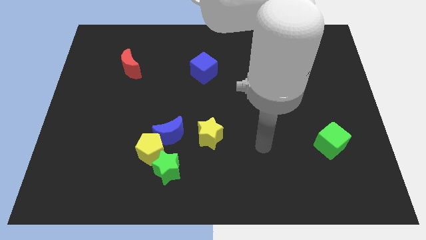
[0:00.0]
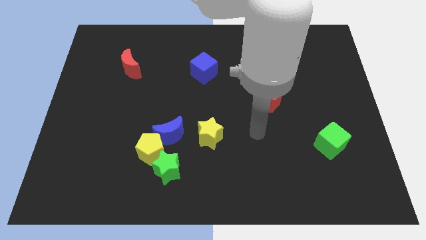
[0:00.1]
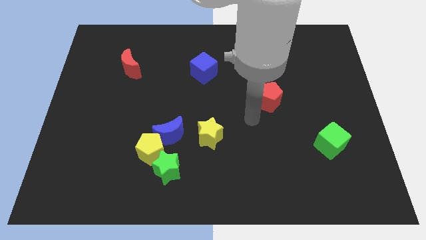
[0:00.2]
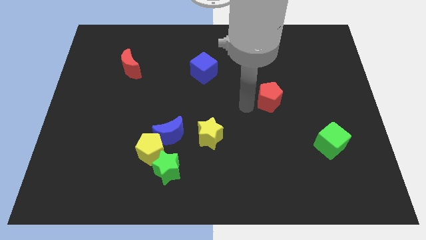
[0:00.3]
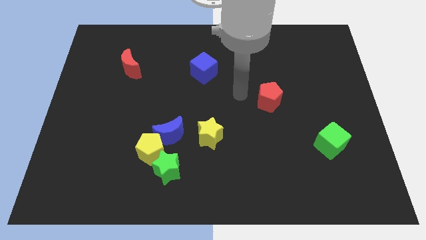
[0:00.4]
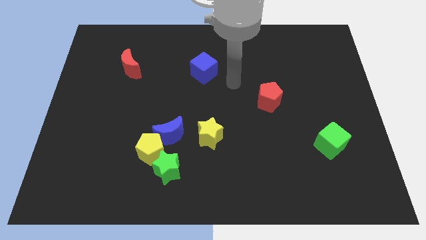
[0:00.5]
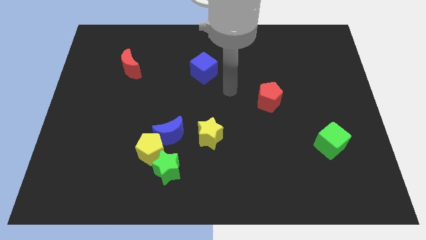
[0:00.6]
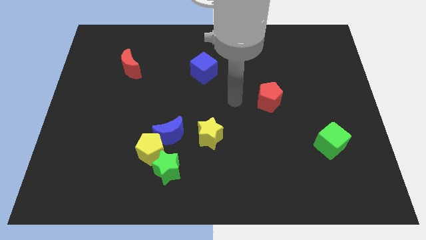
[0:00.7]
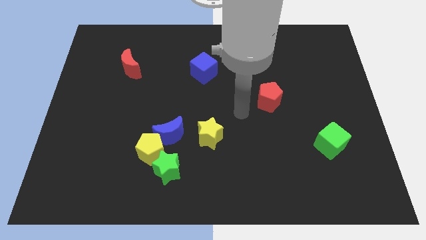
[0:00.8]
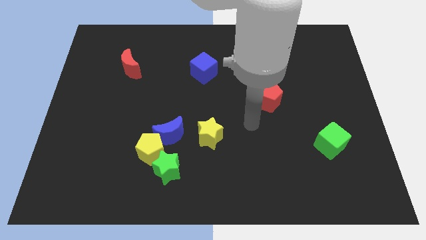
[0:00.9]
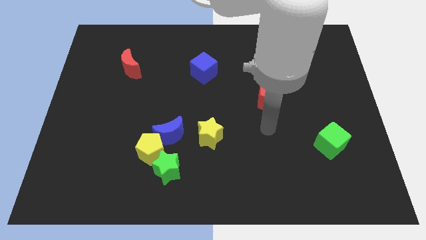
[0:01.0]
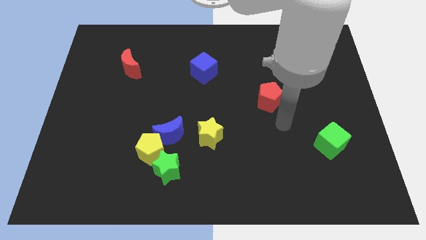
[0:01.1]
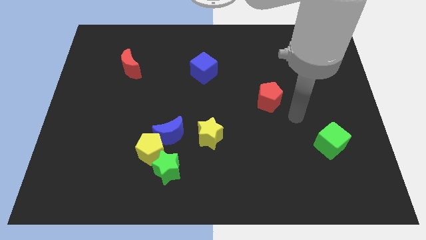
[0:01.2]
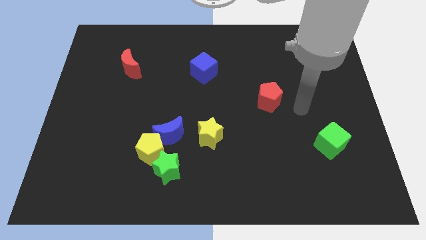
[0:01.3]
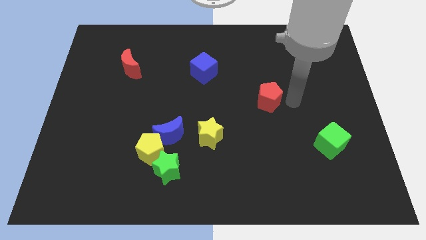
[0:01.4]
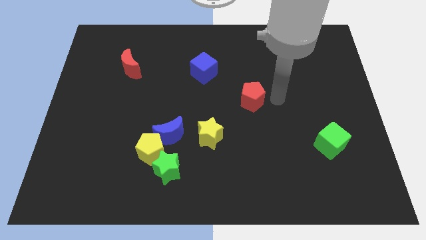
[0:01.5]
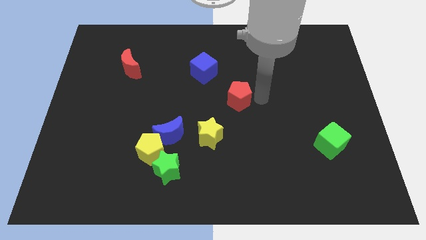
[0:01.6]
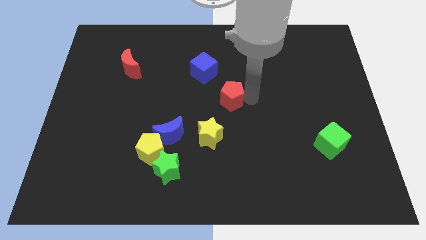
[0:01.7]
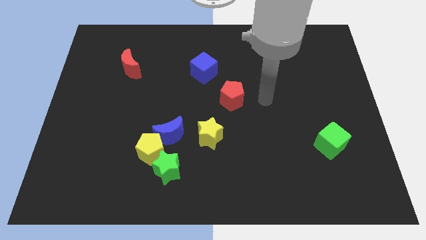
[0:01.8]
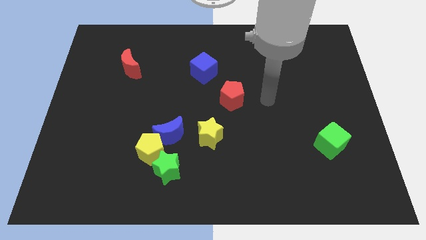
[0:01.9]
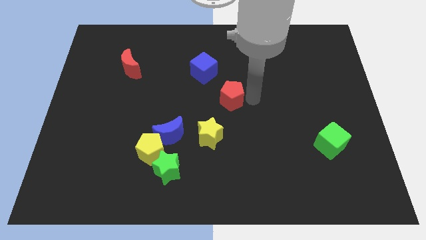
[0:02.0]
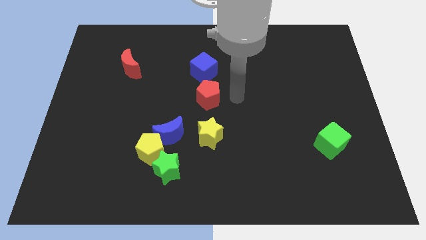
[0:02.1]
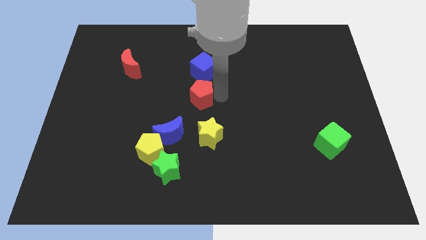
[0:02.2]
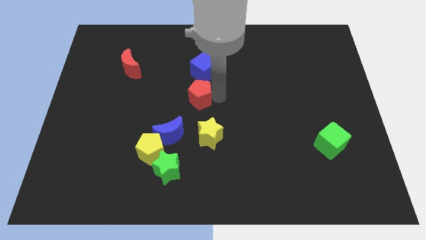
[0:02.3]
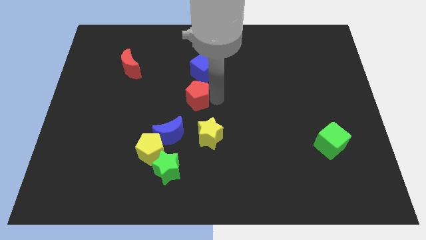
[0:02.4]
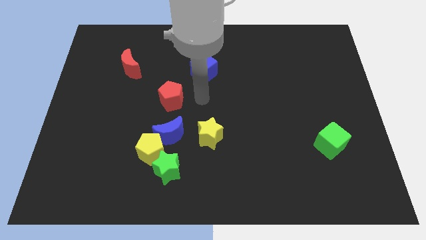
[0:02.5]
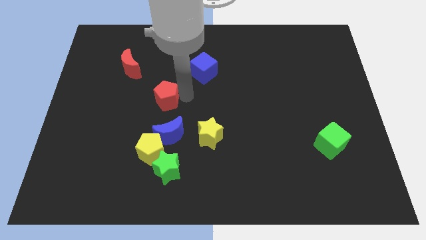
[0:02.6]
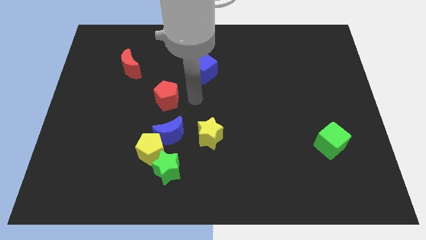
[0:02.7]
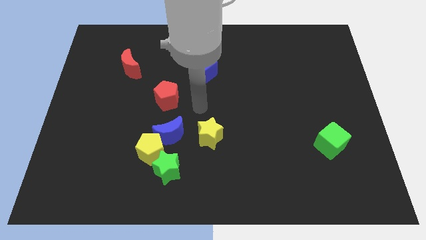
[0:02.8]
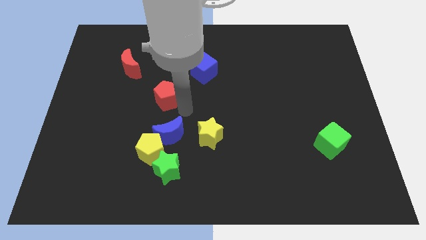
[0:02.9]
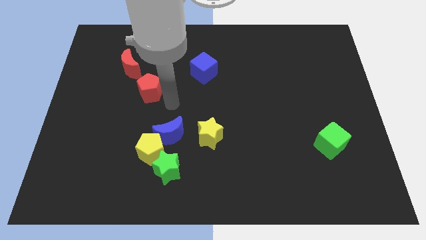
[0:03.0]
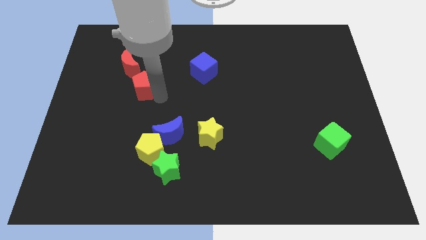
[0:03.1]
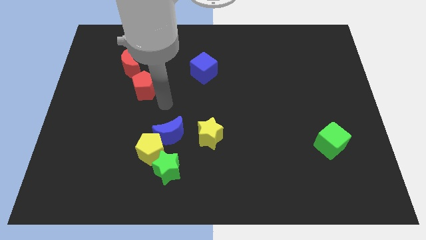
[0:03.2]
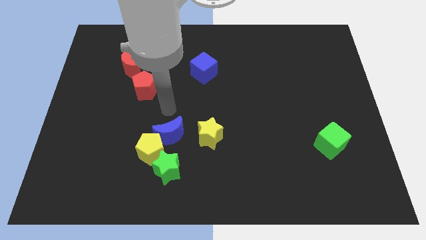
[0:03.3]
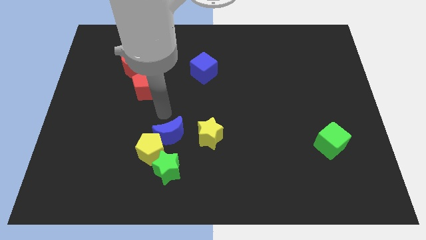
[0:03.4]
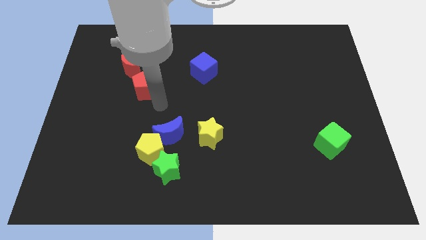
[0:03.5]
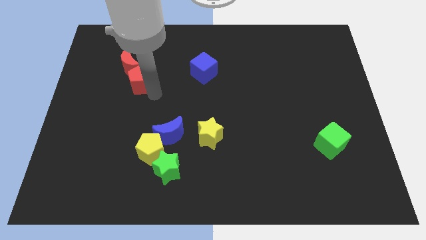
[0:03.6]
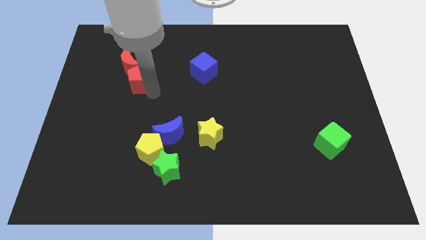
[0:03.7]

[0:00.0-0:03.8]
push the red pentagon into the red crescent

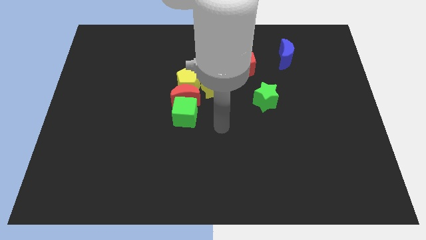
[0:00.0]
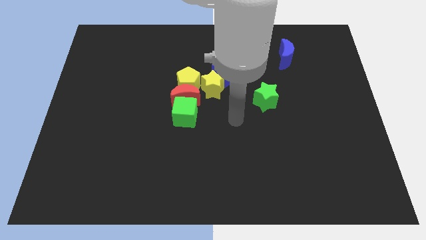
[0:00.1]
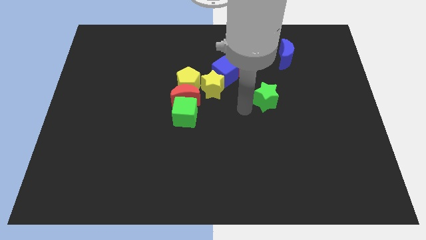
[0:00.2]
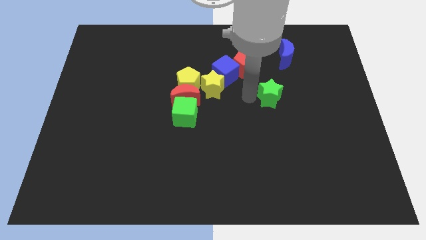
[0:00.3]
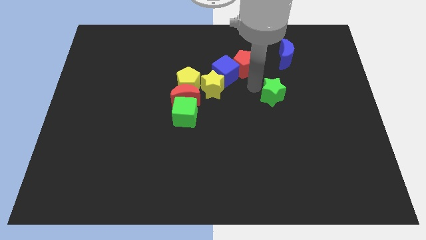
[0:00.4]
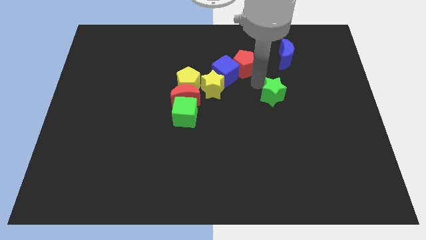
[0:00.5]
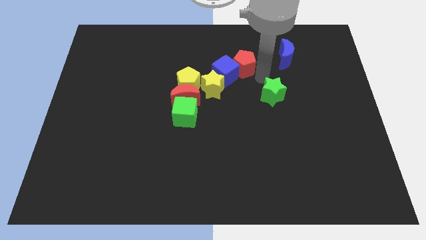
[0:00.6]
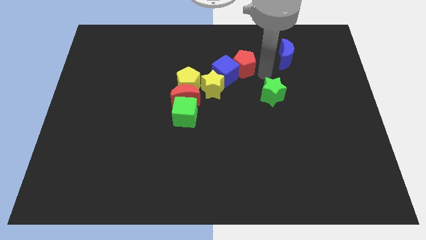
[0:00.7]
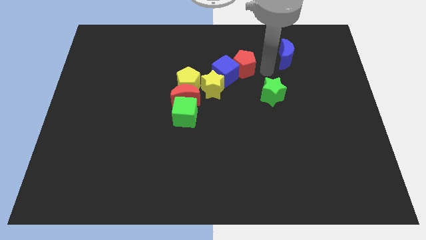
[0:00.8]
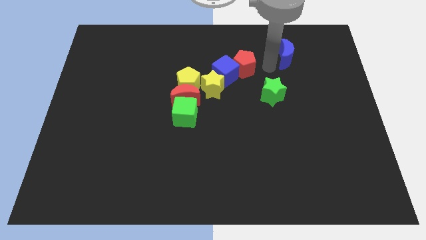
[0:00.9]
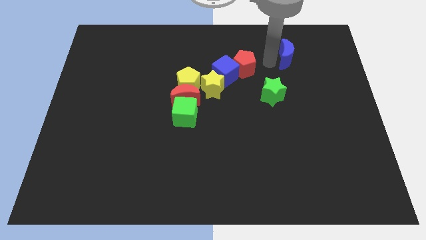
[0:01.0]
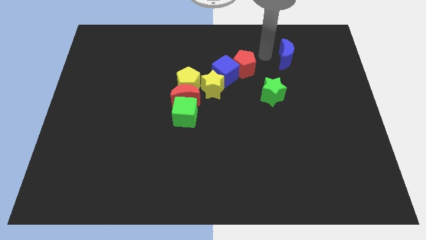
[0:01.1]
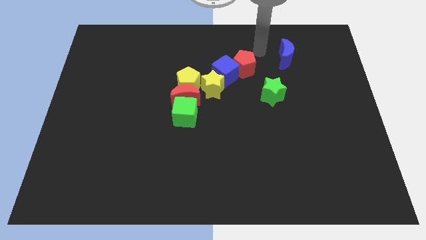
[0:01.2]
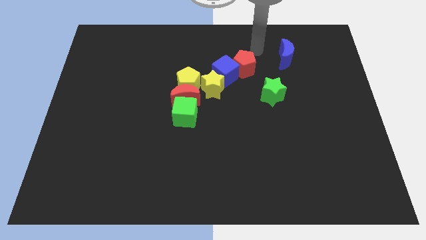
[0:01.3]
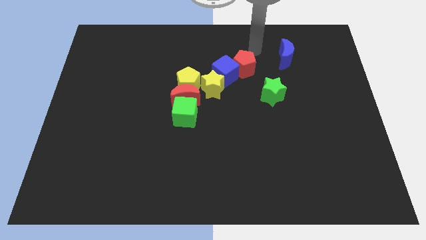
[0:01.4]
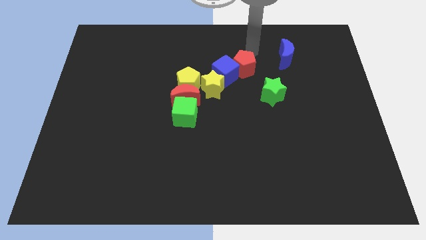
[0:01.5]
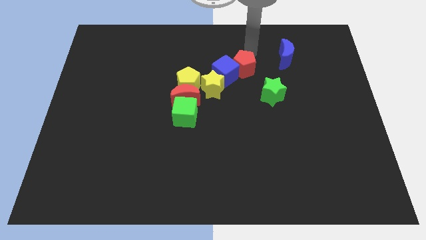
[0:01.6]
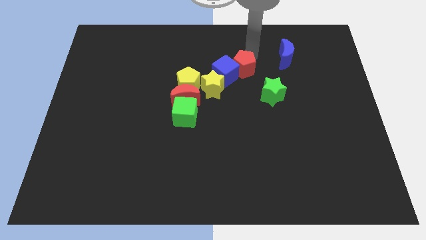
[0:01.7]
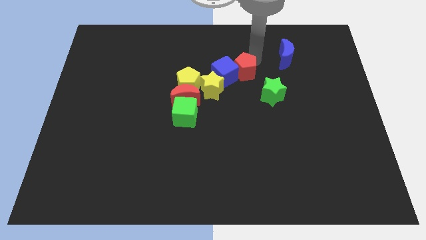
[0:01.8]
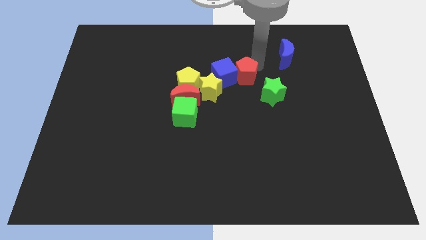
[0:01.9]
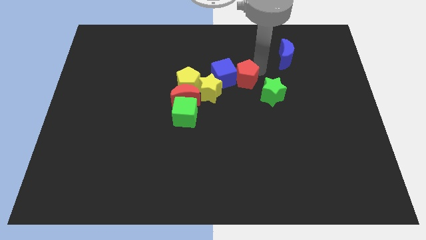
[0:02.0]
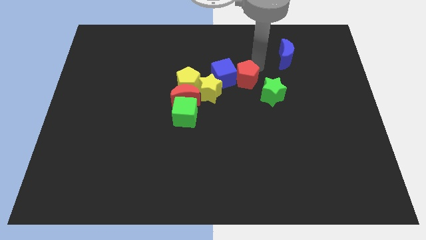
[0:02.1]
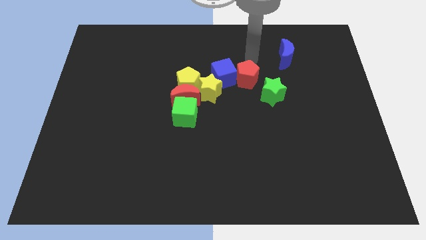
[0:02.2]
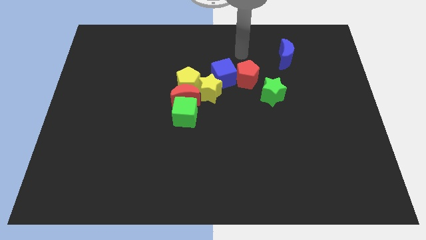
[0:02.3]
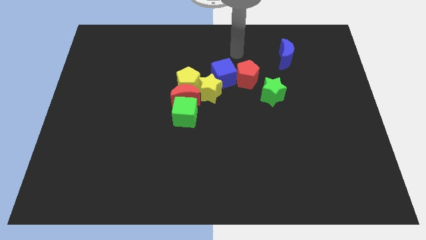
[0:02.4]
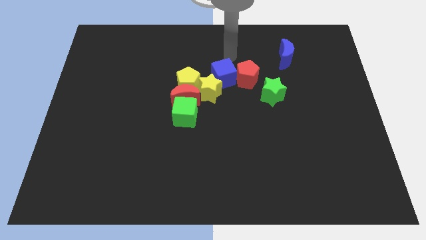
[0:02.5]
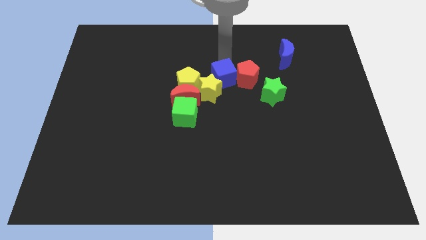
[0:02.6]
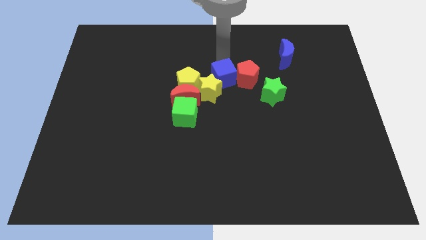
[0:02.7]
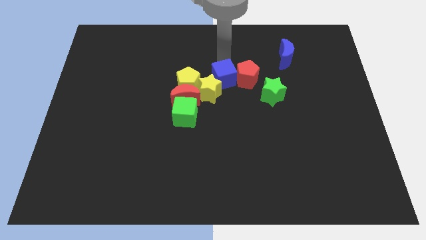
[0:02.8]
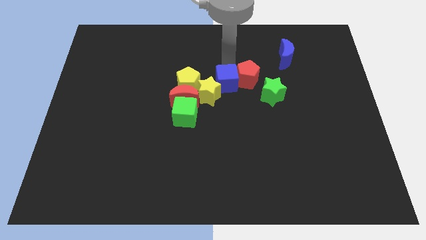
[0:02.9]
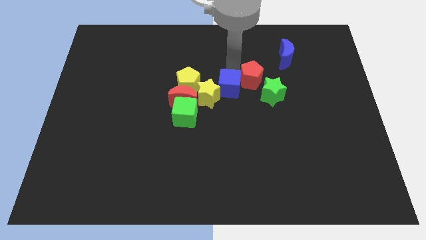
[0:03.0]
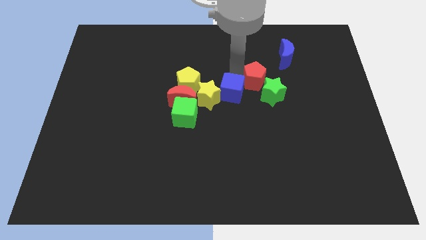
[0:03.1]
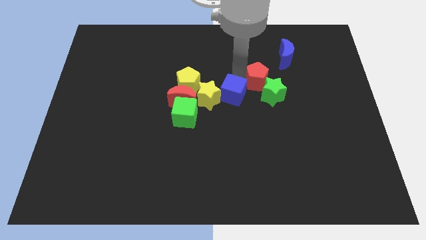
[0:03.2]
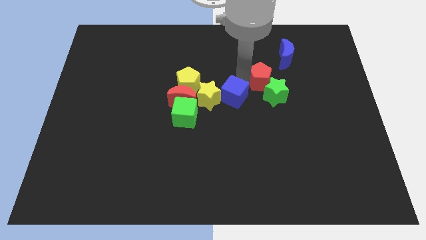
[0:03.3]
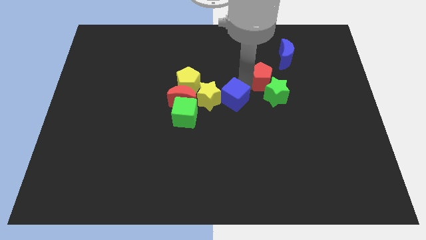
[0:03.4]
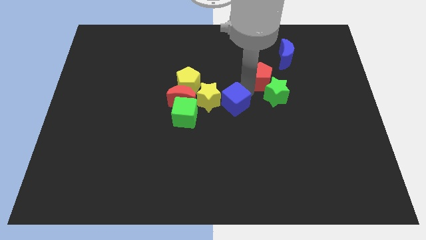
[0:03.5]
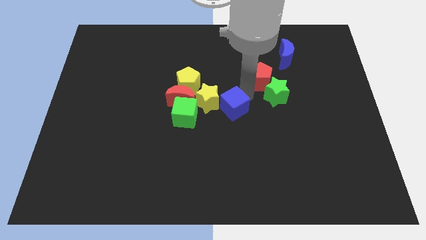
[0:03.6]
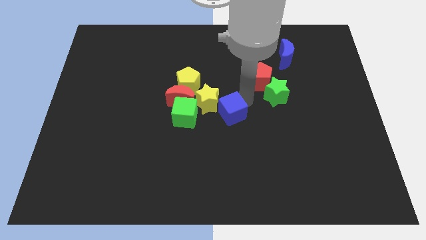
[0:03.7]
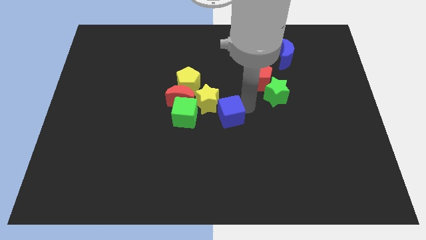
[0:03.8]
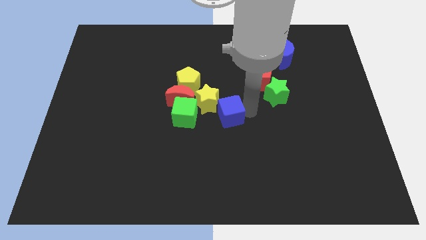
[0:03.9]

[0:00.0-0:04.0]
slightly push the red pentagon into the blue cube

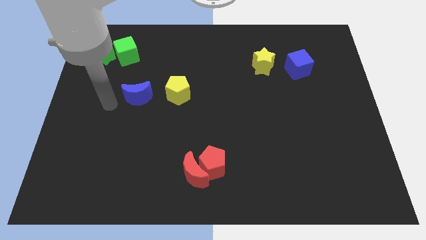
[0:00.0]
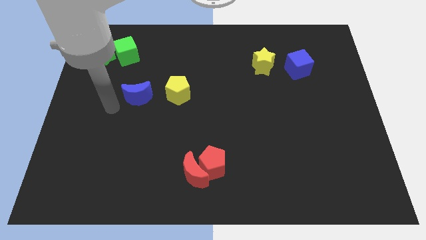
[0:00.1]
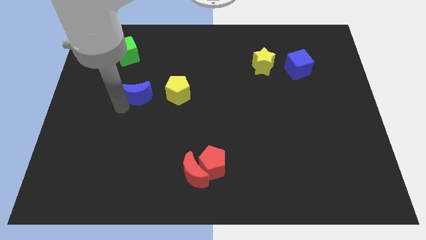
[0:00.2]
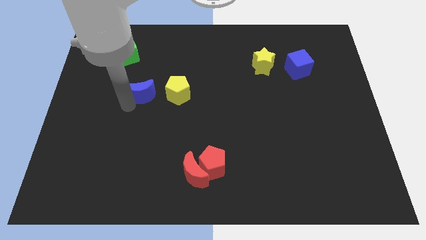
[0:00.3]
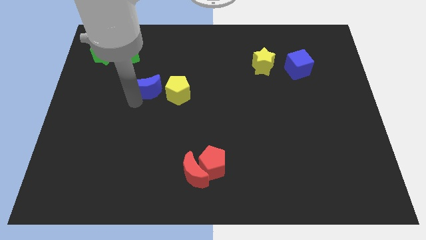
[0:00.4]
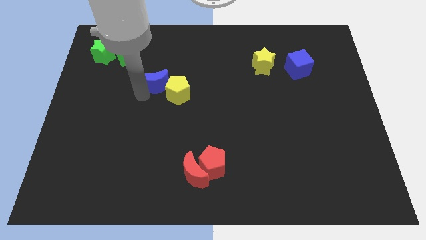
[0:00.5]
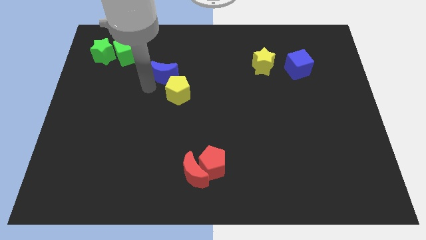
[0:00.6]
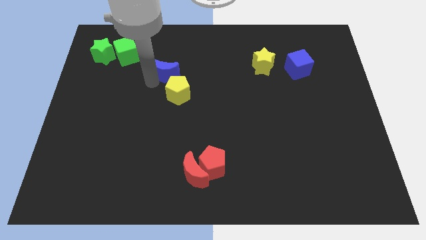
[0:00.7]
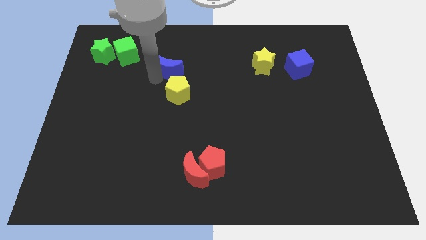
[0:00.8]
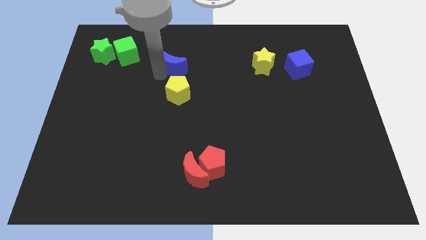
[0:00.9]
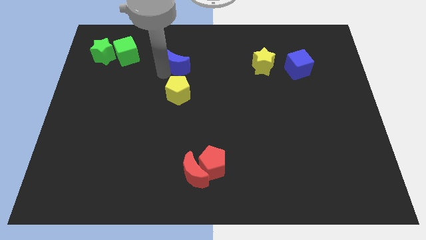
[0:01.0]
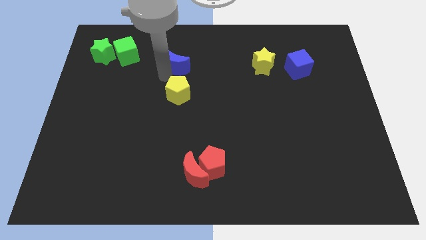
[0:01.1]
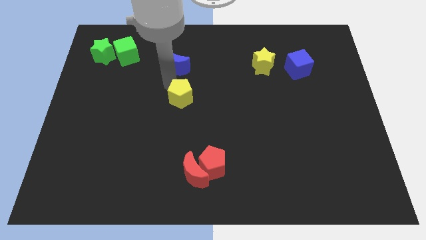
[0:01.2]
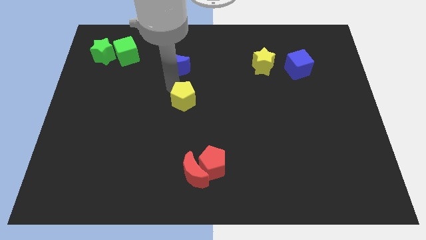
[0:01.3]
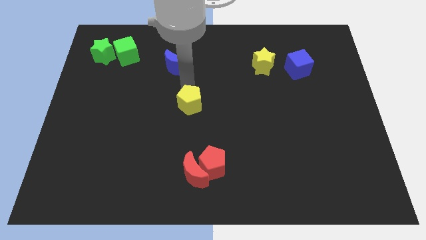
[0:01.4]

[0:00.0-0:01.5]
place blue moon to the top of yellow pentagon
